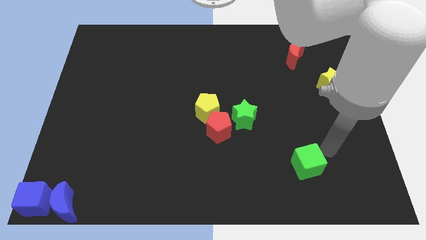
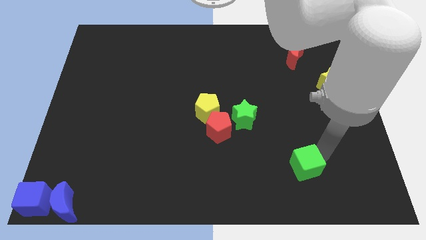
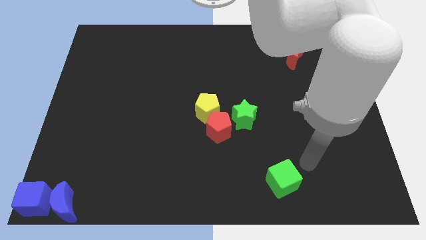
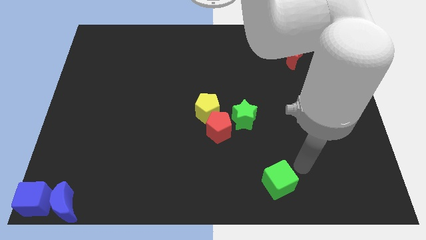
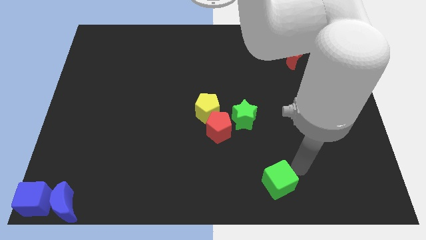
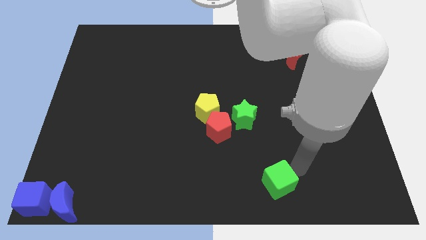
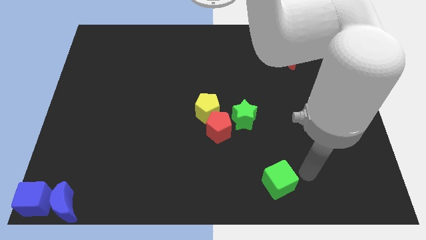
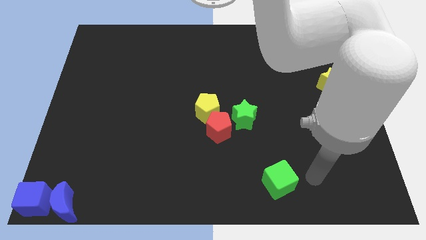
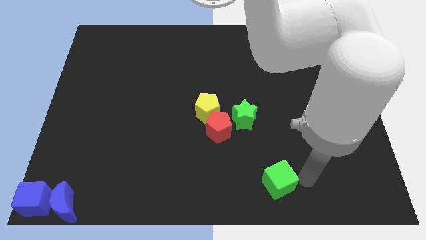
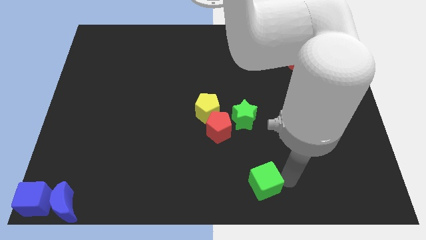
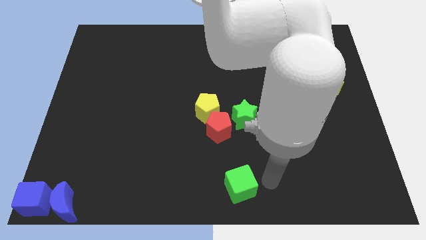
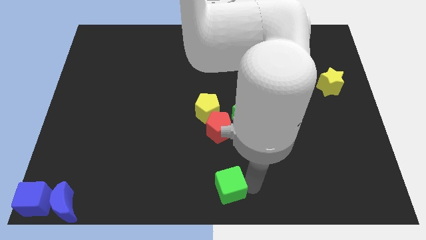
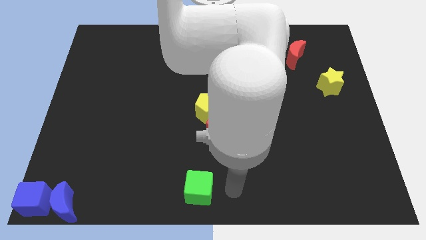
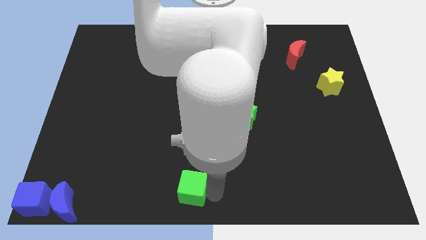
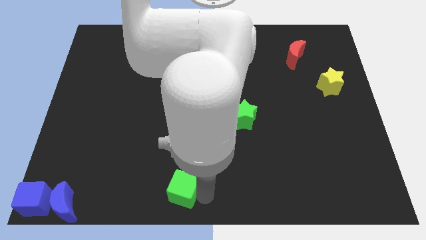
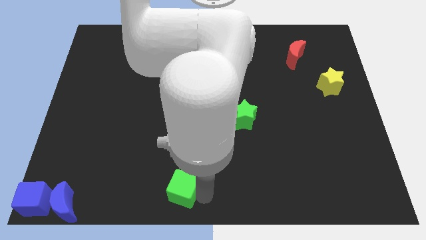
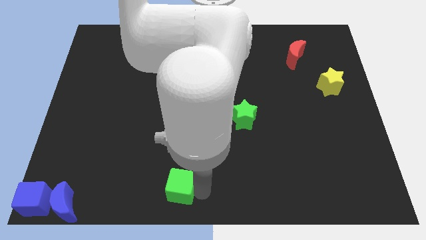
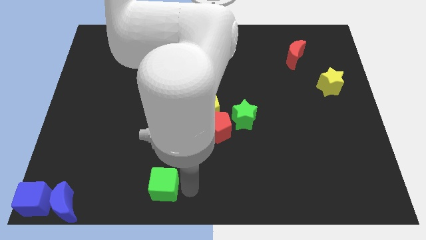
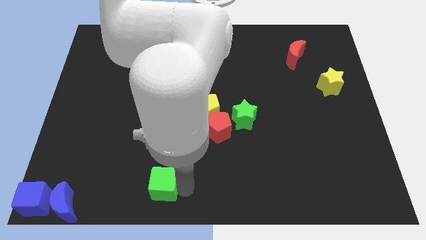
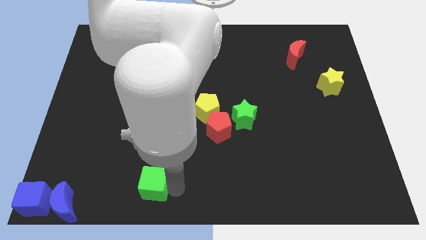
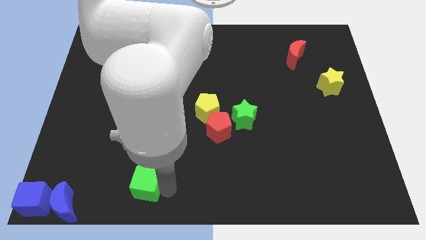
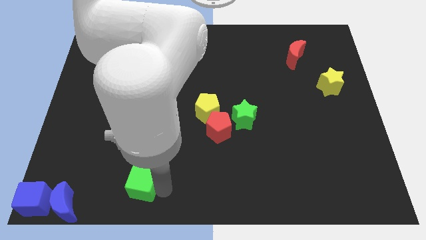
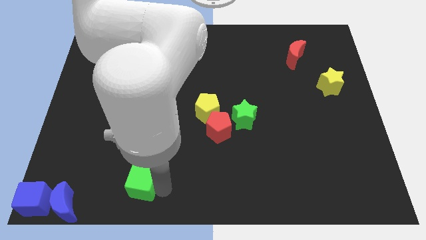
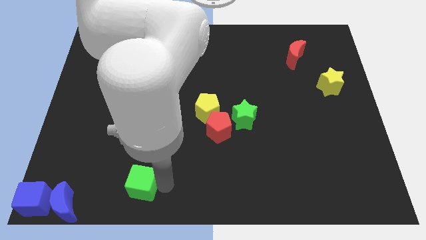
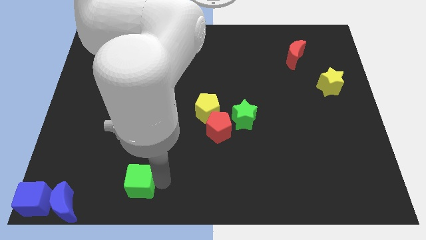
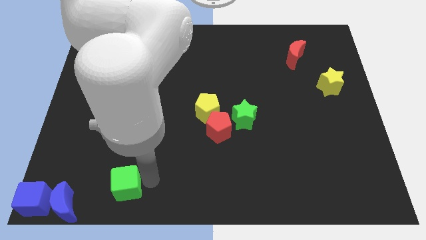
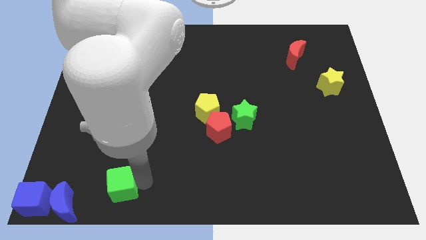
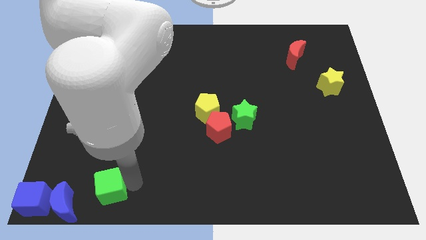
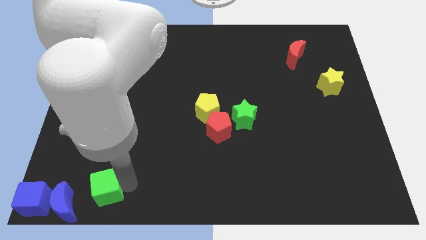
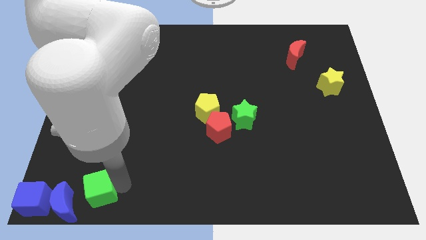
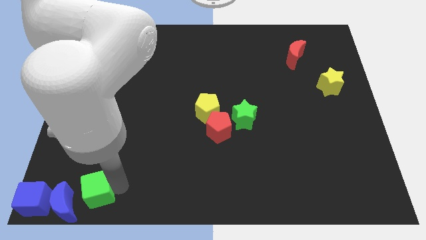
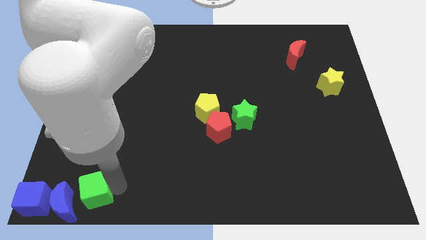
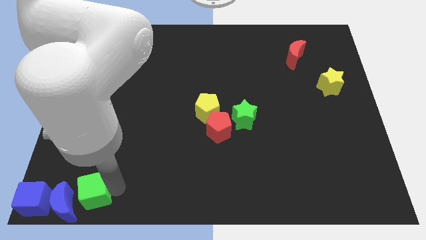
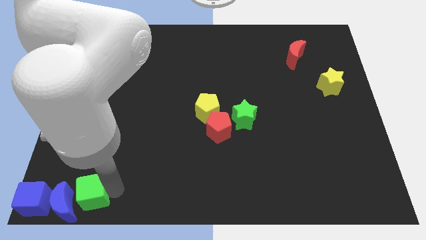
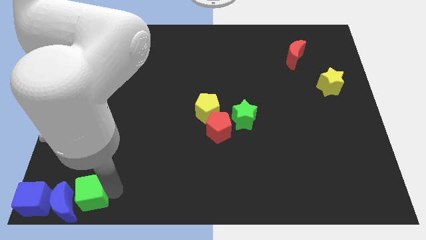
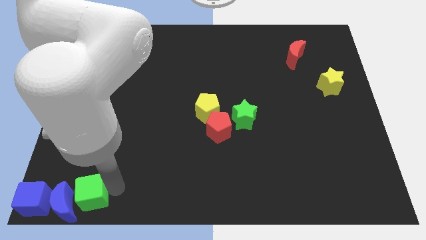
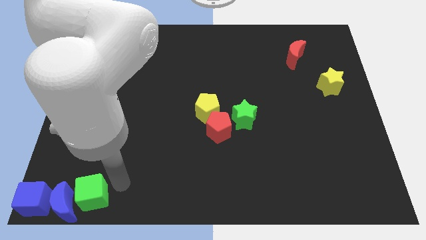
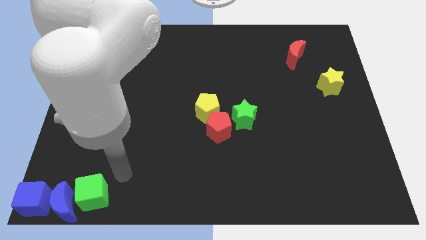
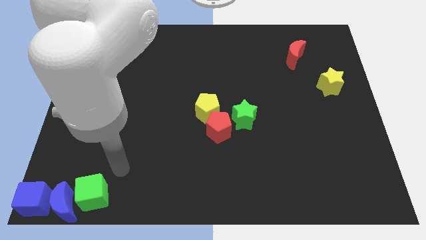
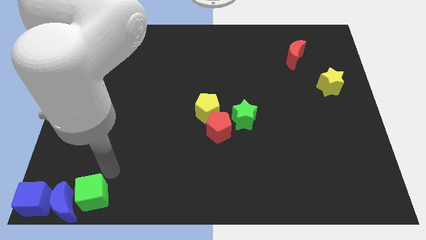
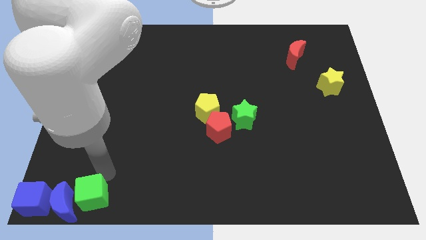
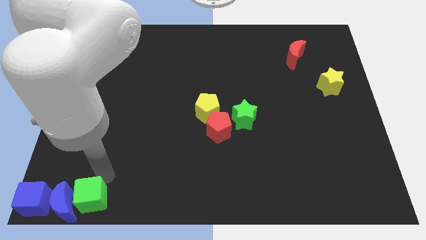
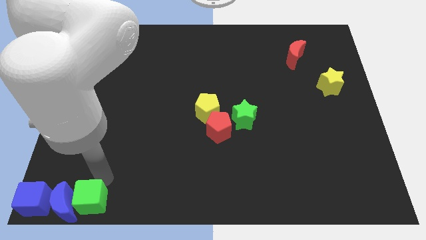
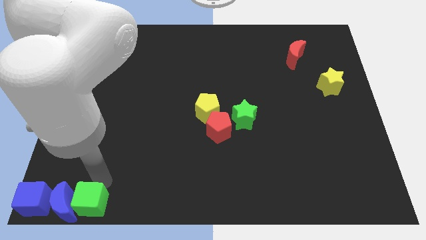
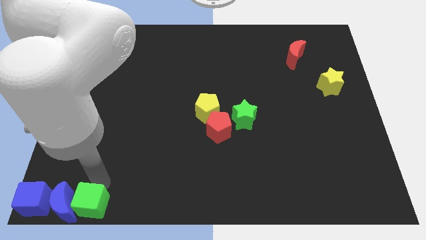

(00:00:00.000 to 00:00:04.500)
push the green cube into the blue crescent

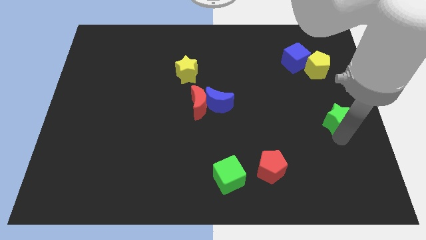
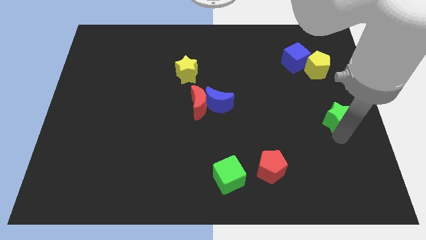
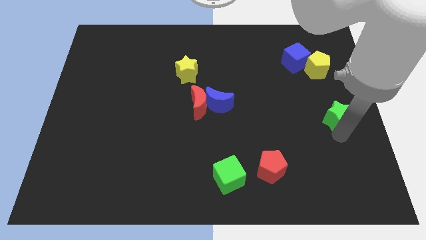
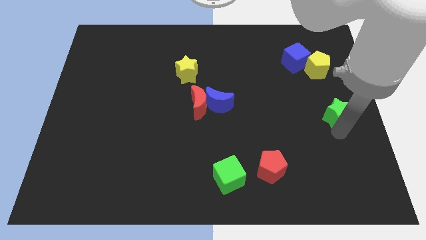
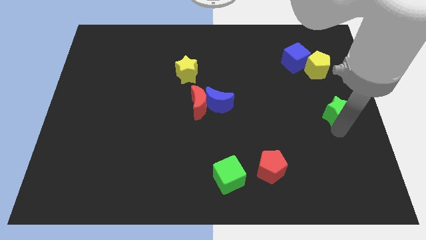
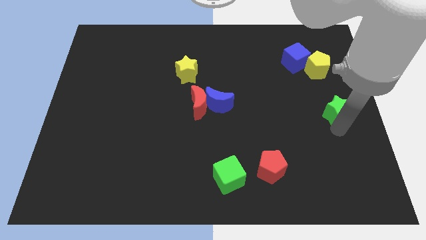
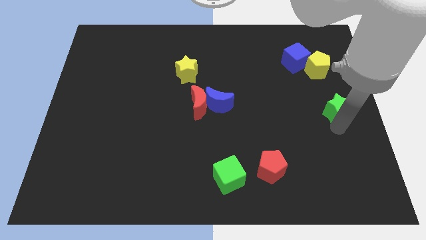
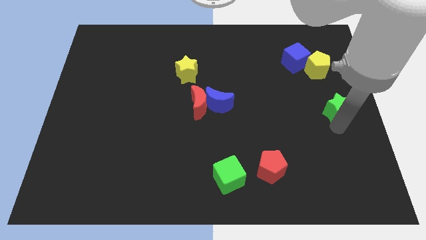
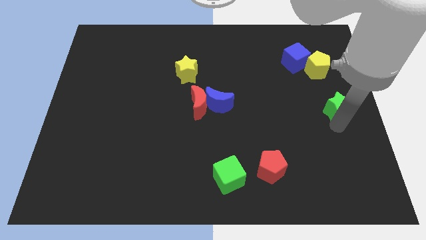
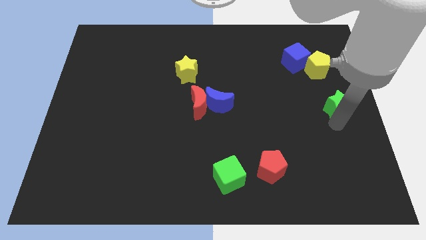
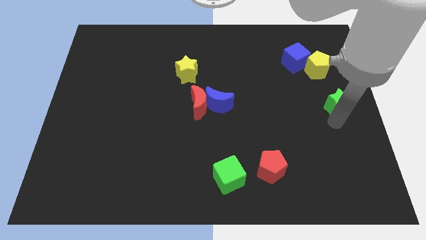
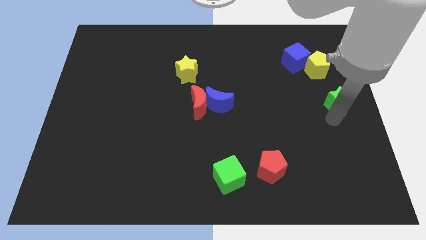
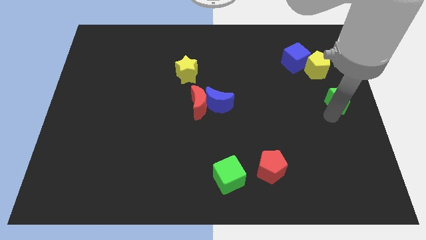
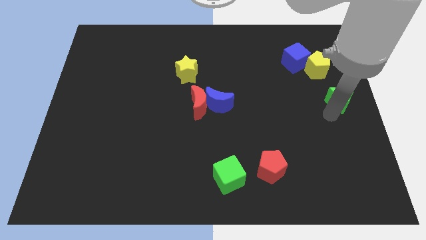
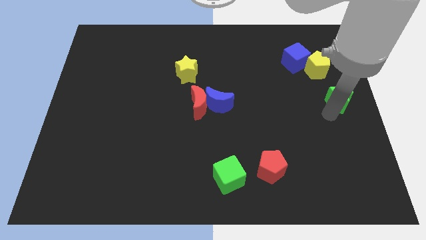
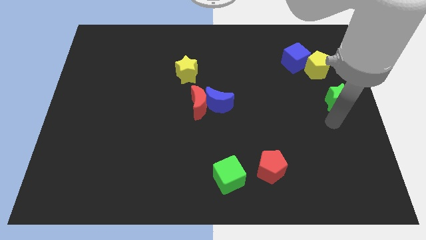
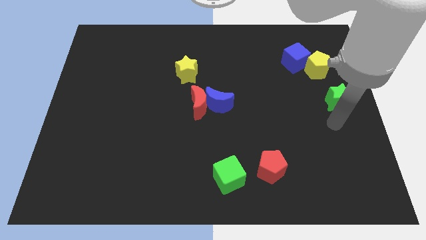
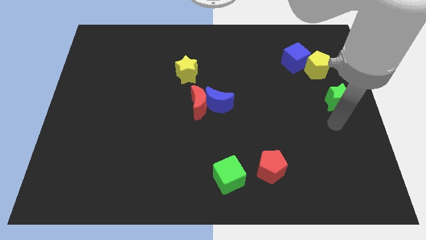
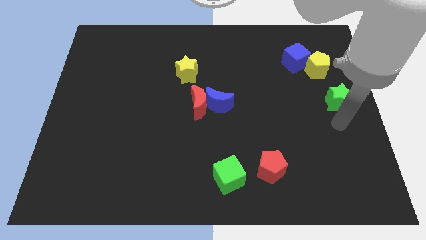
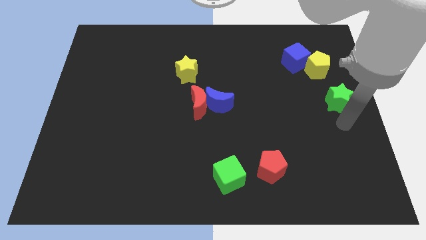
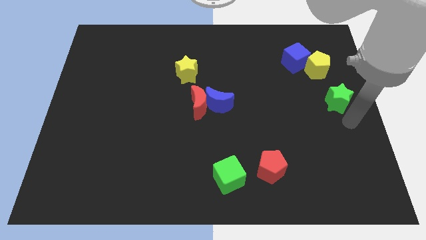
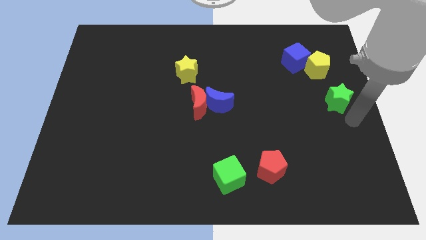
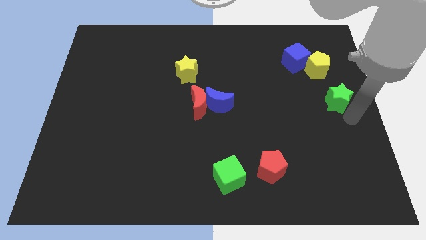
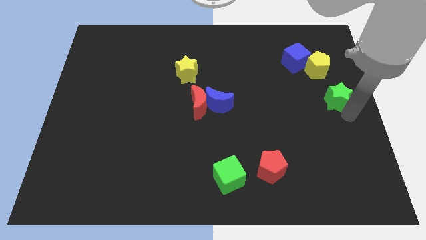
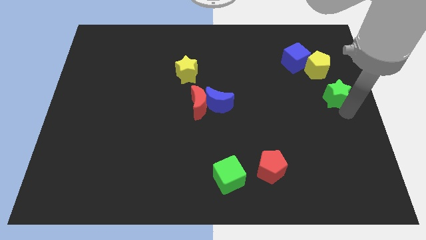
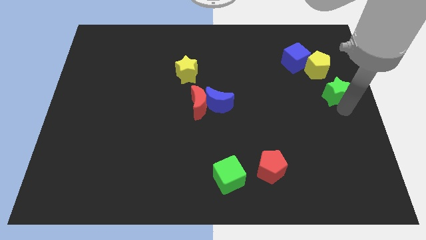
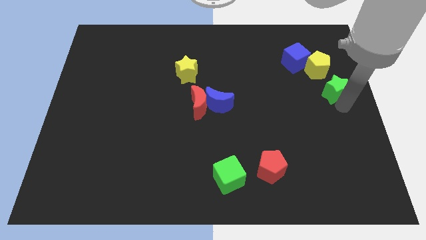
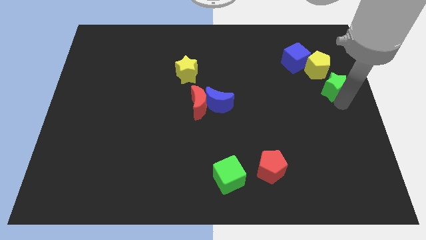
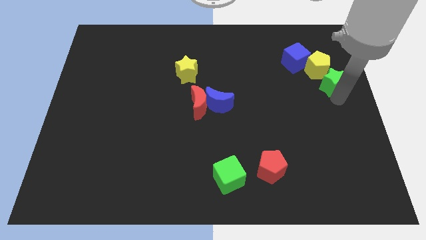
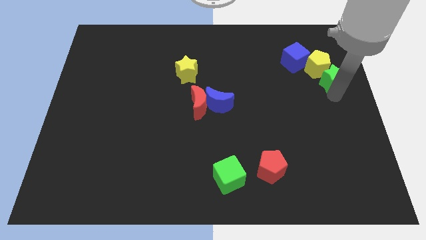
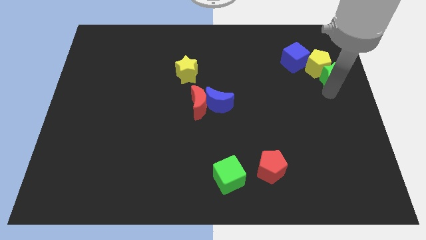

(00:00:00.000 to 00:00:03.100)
slide the green star into the bottom right side of the yellow pentagon

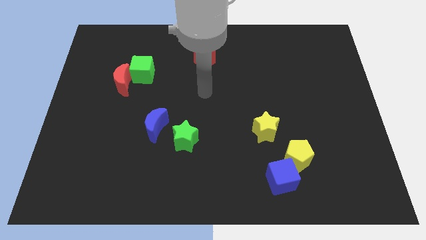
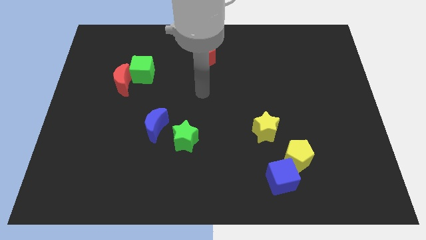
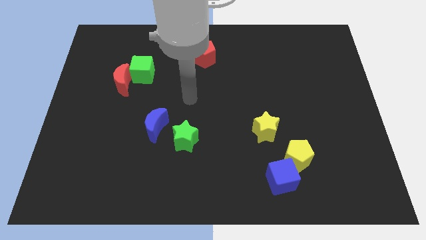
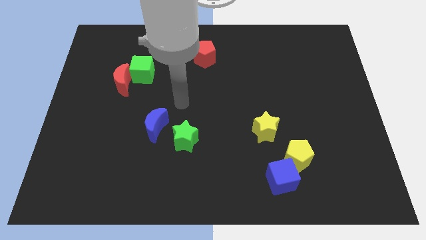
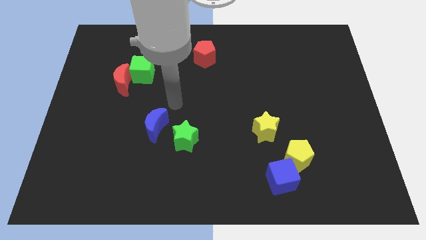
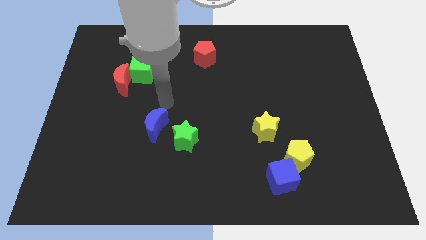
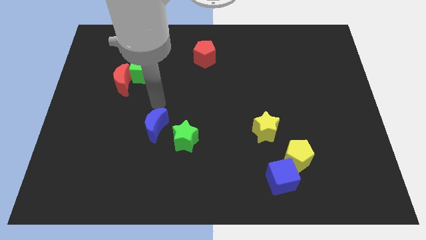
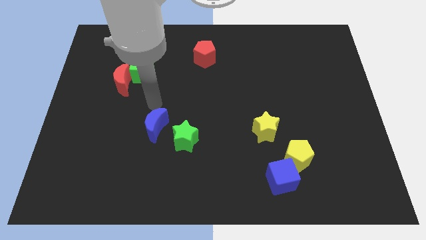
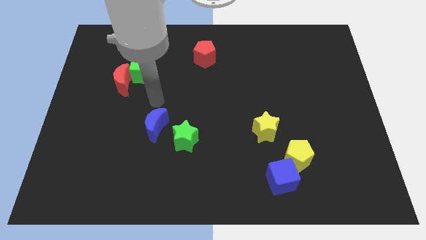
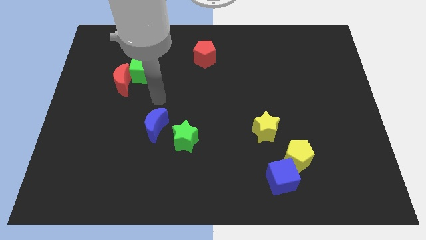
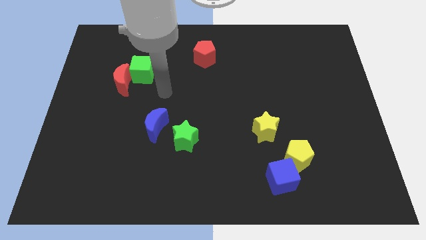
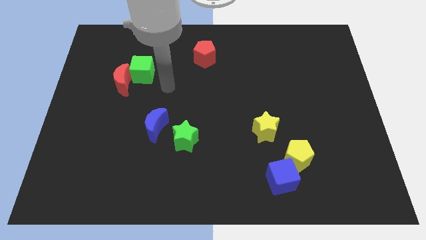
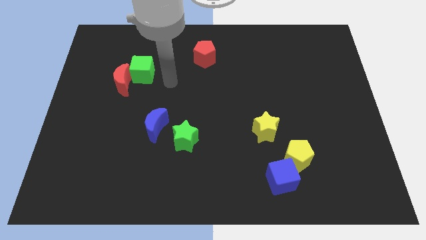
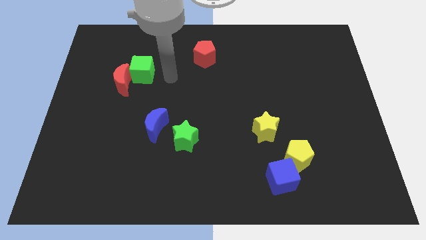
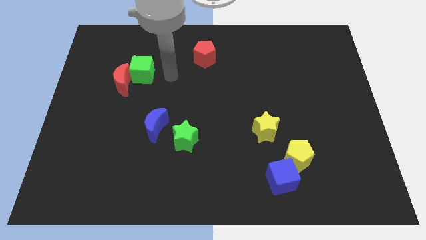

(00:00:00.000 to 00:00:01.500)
point your arm at the right of the green cube
